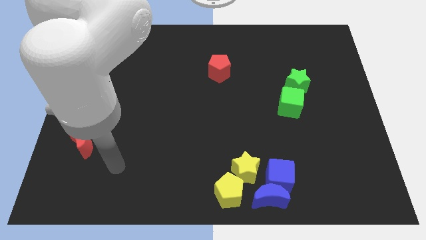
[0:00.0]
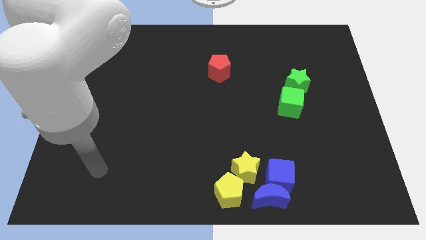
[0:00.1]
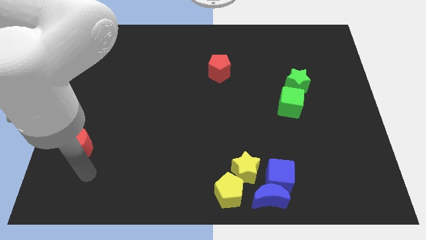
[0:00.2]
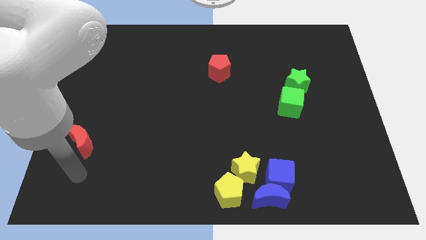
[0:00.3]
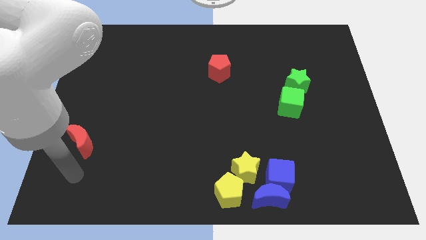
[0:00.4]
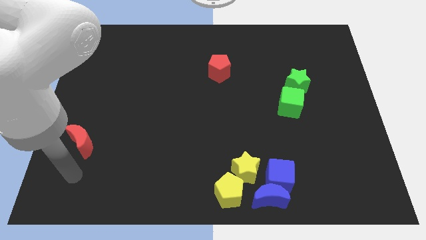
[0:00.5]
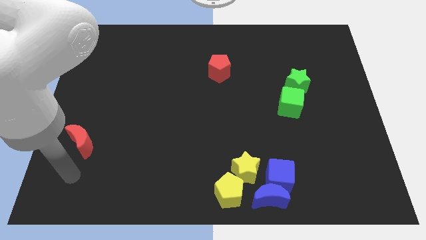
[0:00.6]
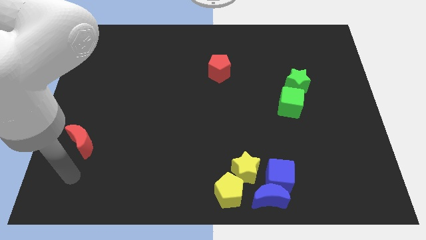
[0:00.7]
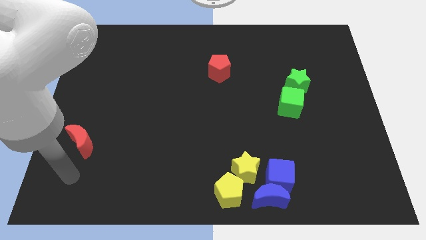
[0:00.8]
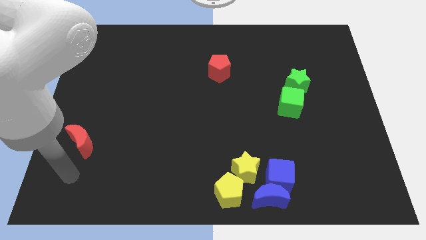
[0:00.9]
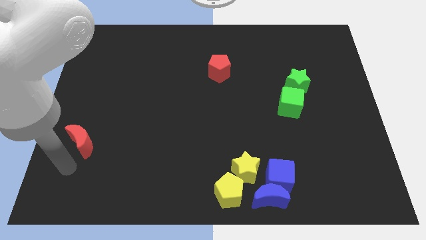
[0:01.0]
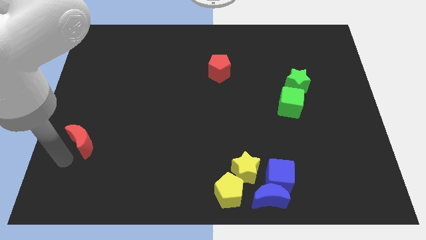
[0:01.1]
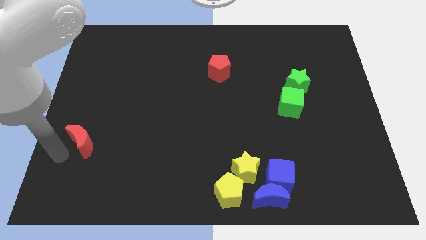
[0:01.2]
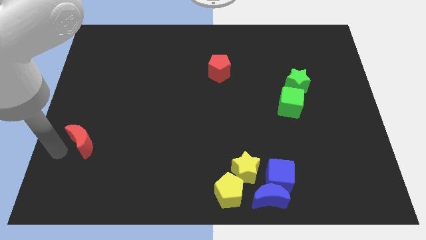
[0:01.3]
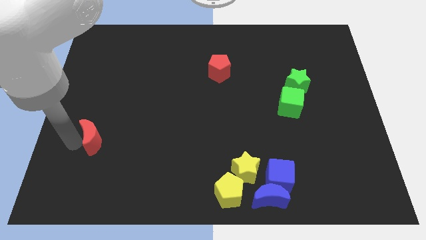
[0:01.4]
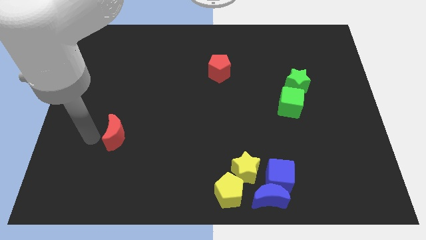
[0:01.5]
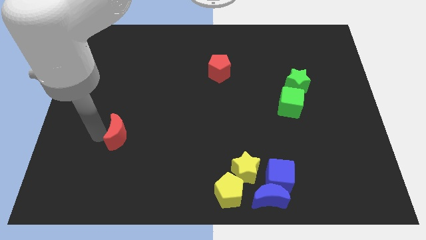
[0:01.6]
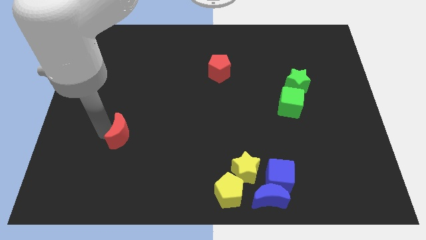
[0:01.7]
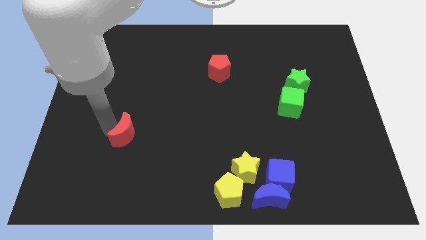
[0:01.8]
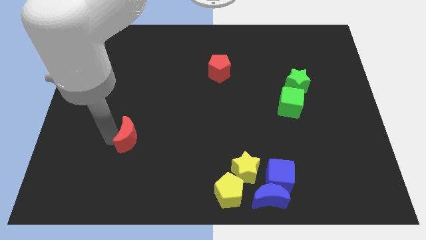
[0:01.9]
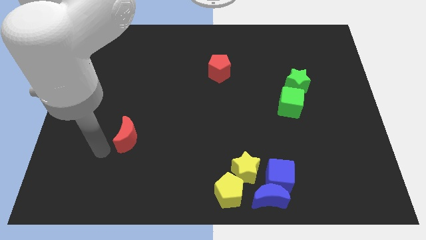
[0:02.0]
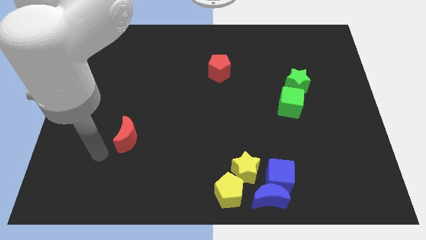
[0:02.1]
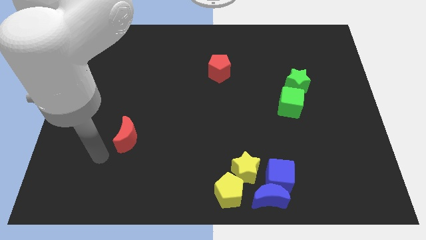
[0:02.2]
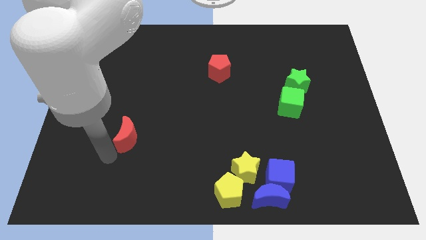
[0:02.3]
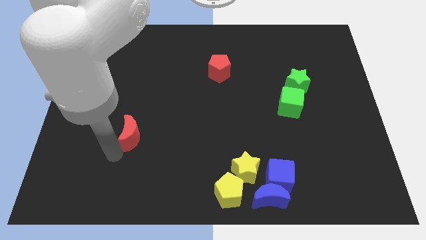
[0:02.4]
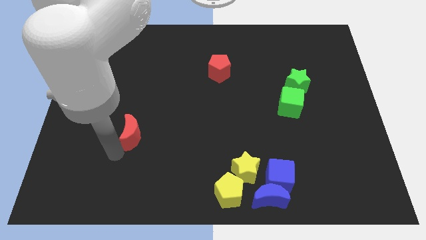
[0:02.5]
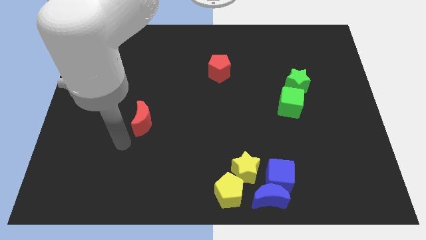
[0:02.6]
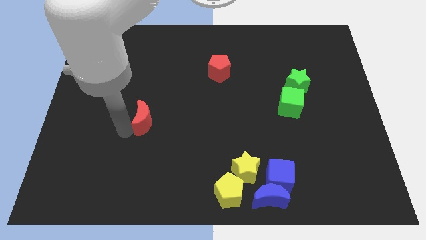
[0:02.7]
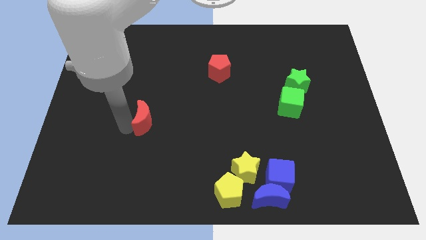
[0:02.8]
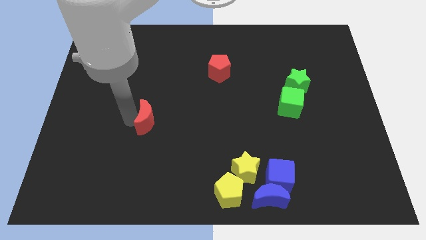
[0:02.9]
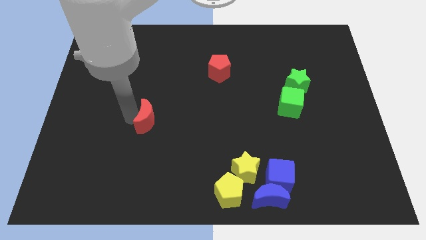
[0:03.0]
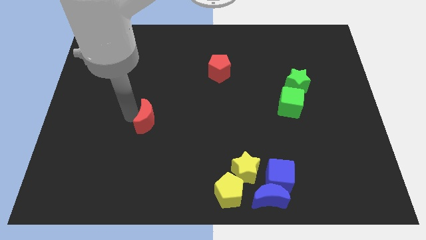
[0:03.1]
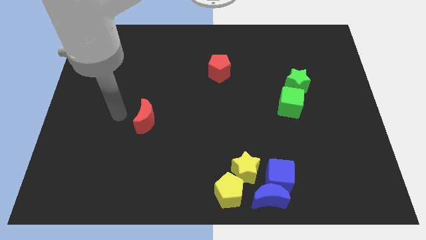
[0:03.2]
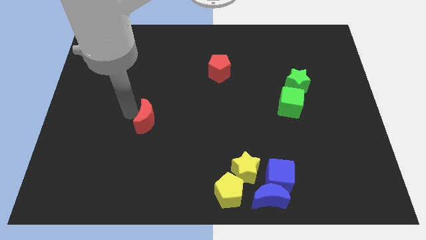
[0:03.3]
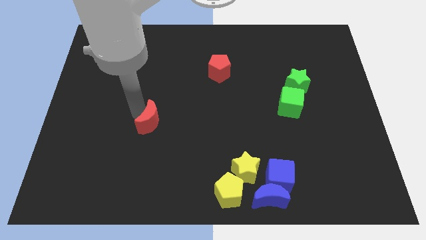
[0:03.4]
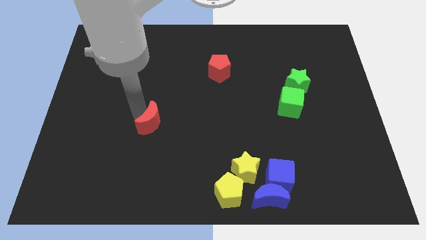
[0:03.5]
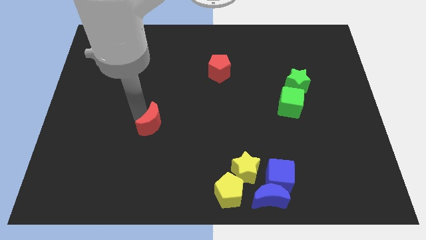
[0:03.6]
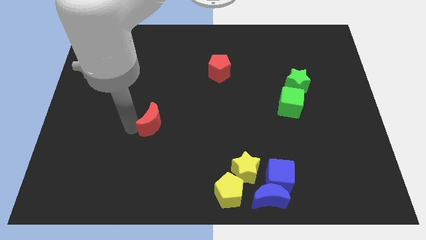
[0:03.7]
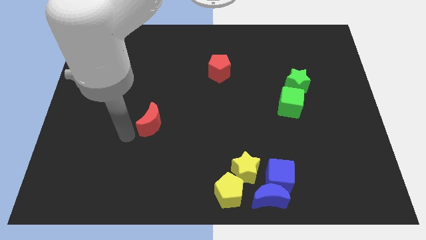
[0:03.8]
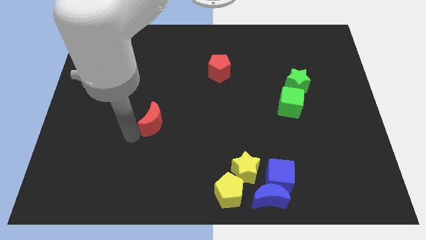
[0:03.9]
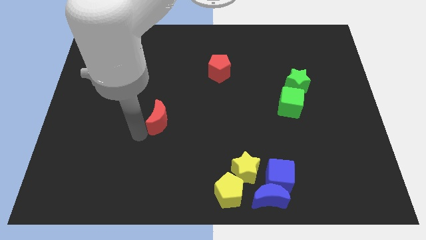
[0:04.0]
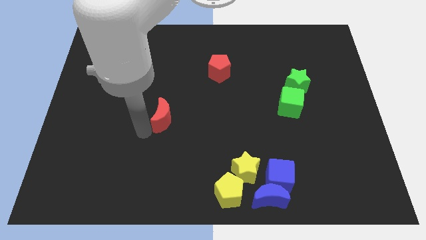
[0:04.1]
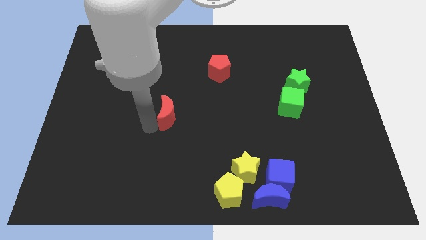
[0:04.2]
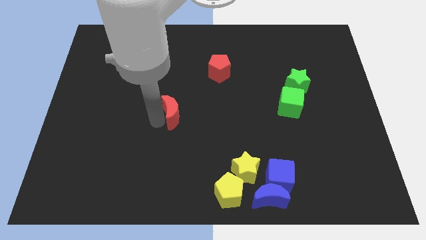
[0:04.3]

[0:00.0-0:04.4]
push the red crescent towards the center of the board

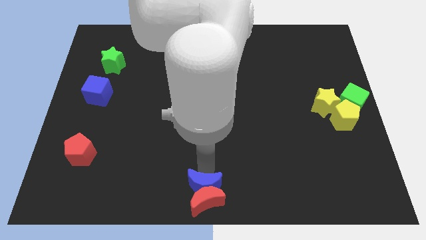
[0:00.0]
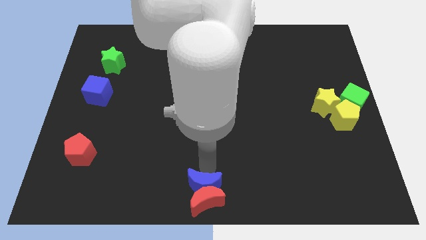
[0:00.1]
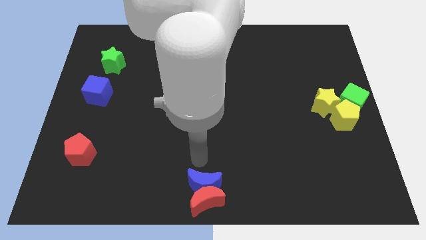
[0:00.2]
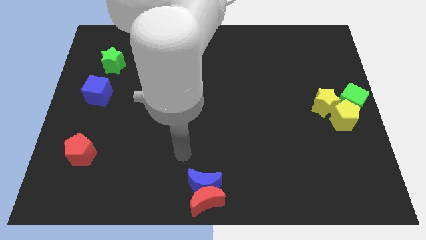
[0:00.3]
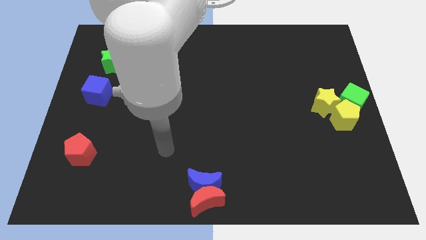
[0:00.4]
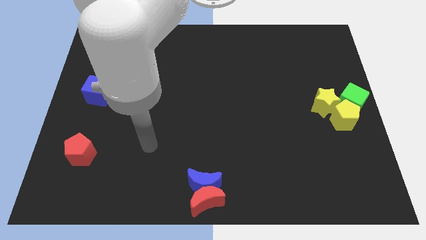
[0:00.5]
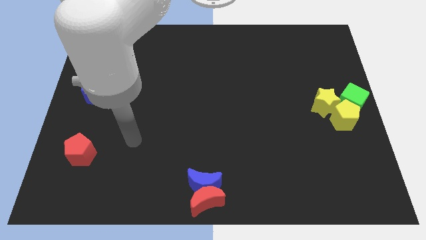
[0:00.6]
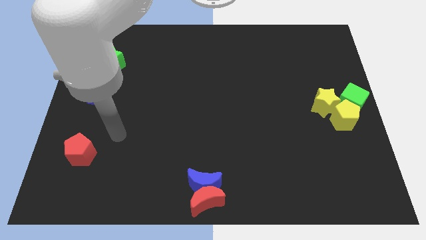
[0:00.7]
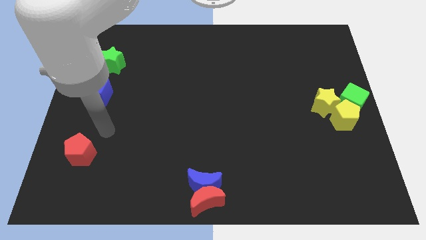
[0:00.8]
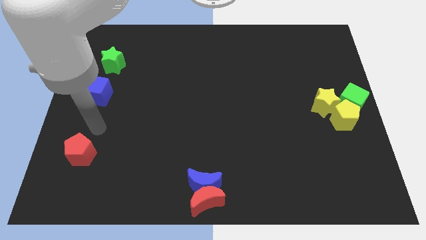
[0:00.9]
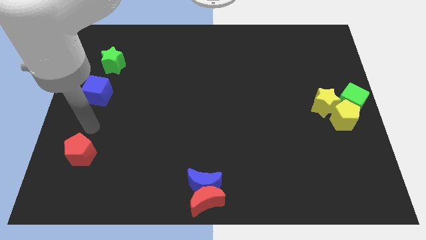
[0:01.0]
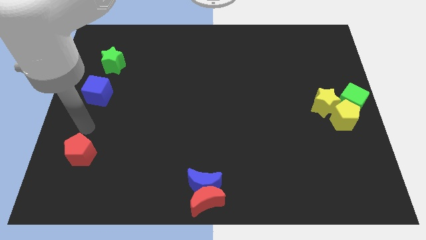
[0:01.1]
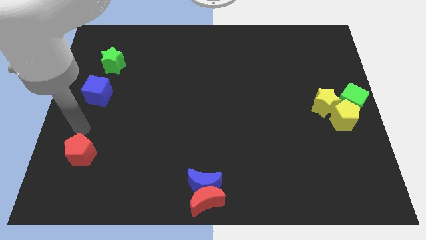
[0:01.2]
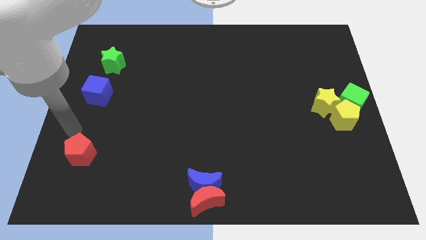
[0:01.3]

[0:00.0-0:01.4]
move your arm on top of the red crescent

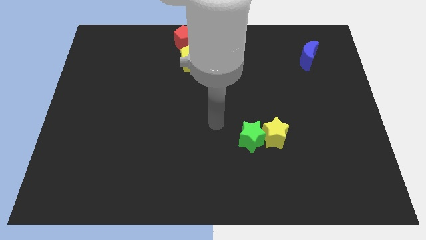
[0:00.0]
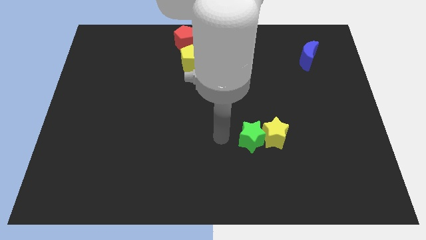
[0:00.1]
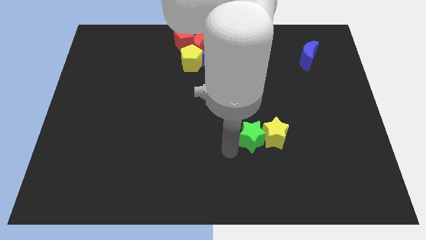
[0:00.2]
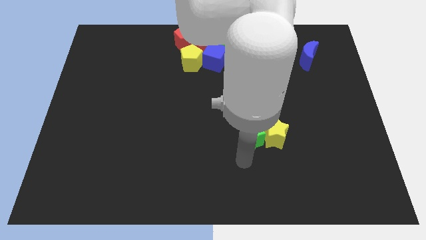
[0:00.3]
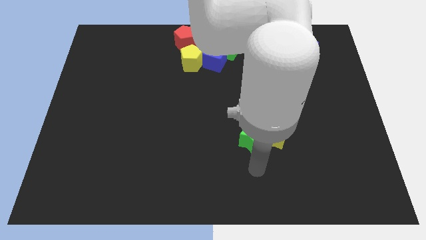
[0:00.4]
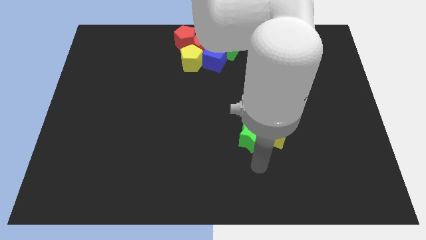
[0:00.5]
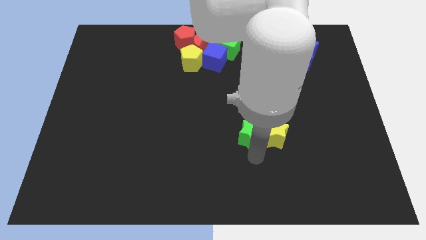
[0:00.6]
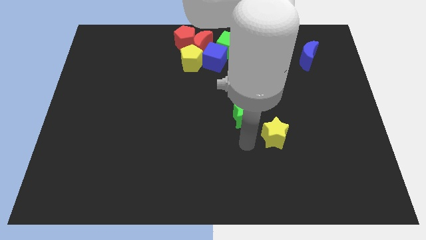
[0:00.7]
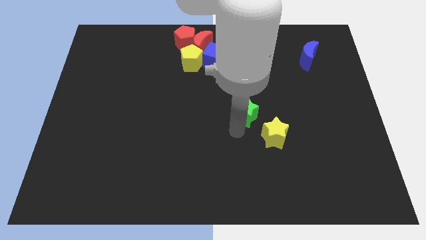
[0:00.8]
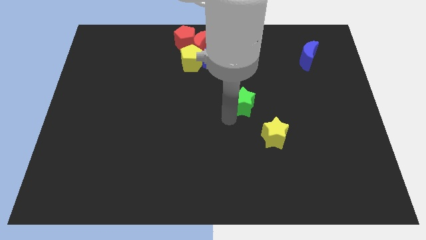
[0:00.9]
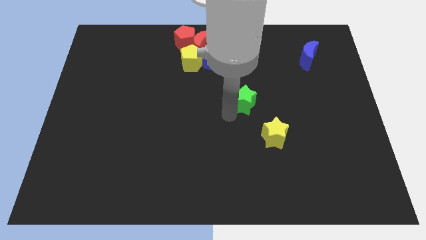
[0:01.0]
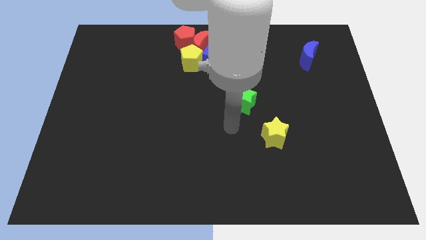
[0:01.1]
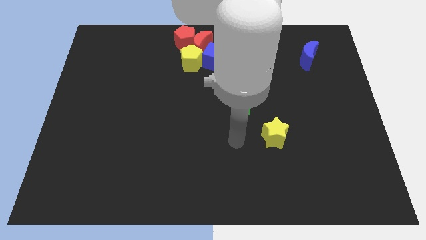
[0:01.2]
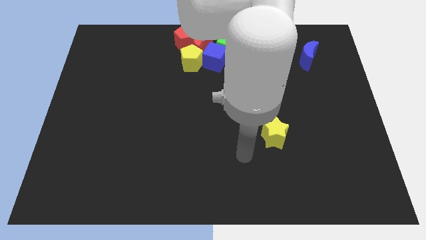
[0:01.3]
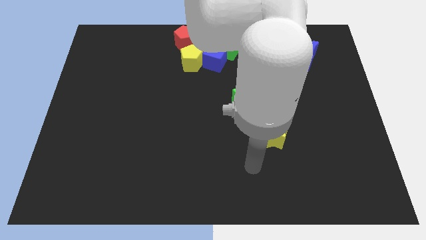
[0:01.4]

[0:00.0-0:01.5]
move the green star to the center of the board

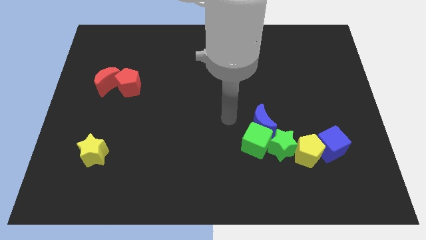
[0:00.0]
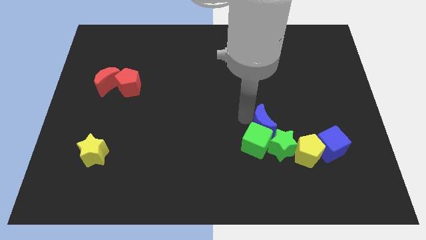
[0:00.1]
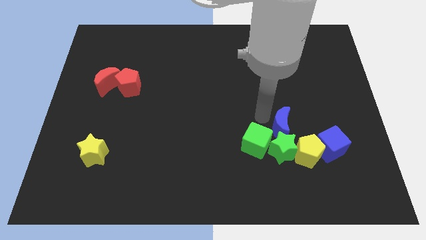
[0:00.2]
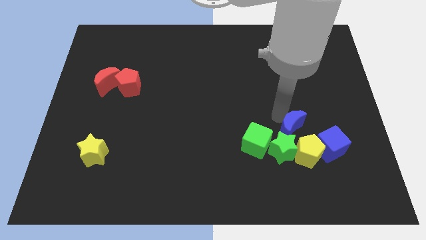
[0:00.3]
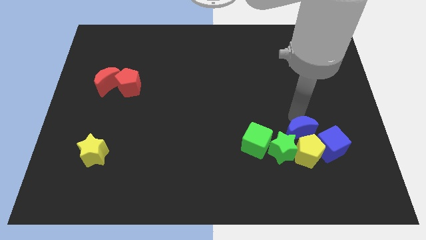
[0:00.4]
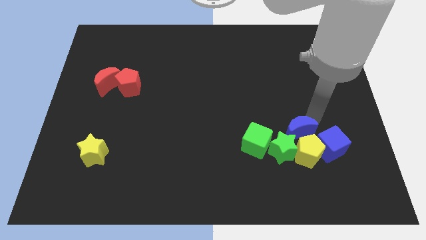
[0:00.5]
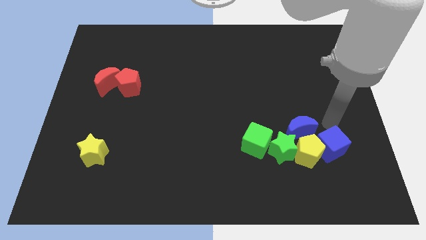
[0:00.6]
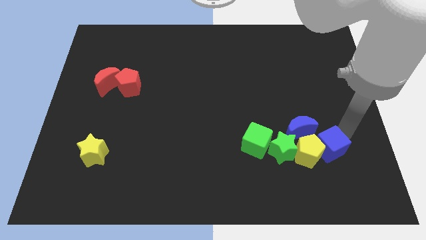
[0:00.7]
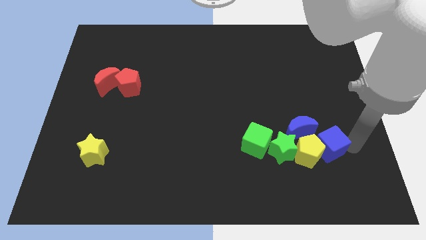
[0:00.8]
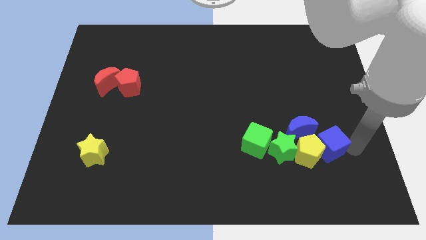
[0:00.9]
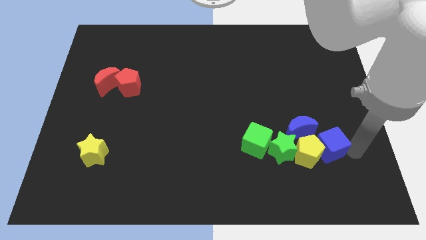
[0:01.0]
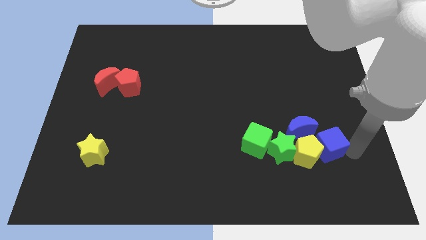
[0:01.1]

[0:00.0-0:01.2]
push the blue crescent to the top of the yellow pentagon

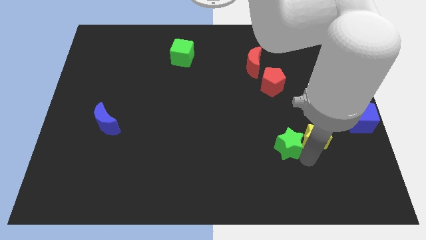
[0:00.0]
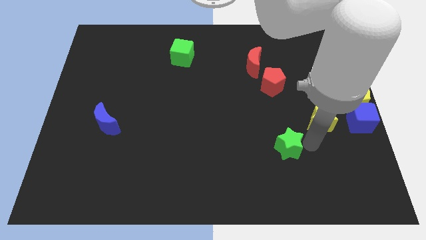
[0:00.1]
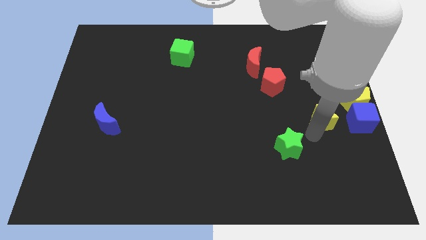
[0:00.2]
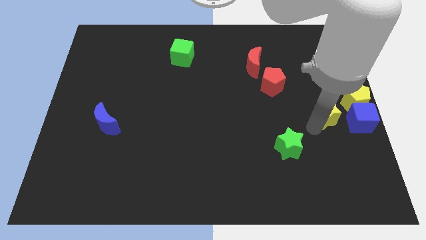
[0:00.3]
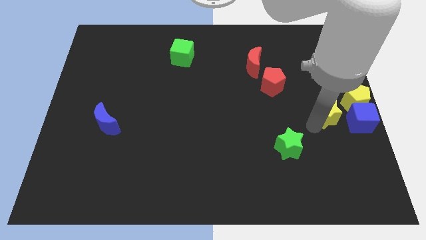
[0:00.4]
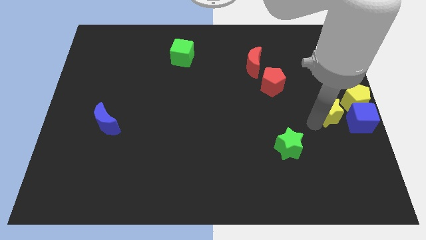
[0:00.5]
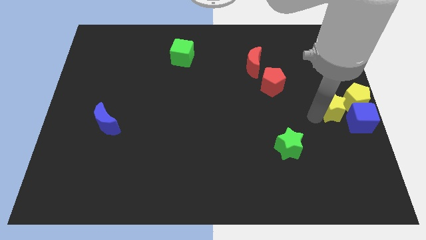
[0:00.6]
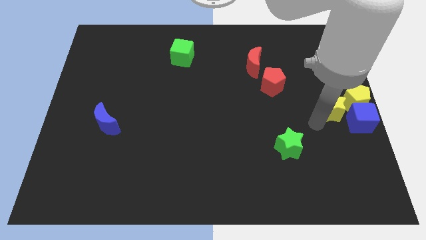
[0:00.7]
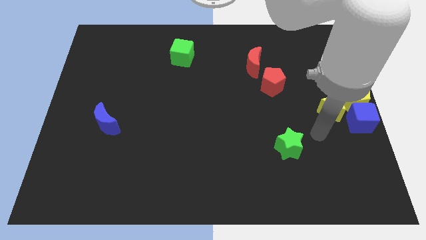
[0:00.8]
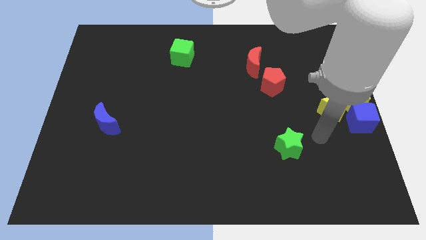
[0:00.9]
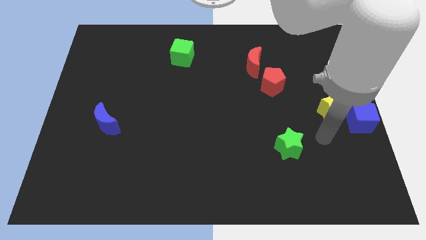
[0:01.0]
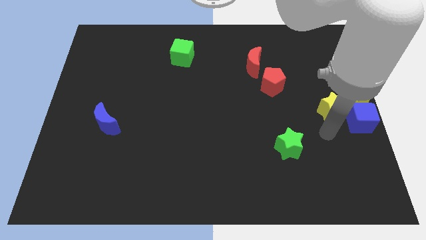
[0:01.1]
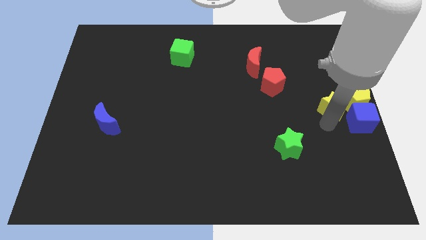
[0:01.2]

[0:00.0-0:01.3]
push the yellow star away from the green star
